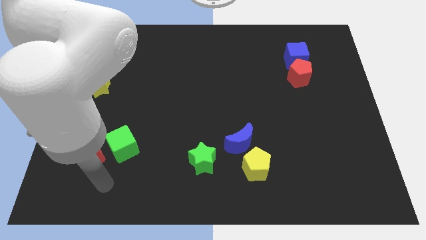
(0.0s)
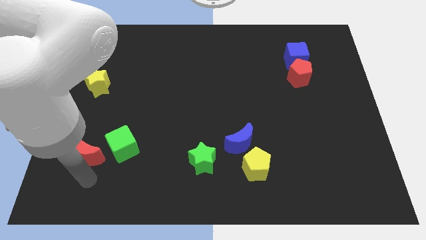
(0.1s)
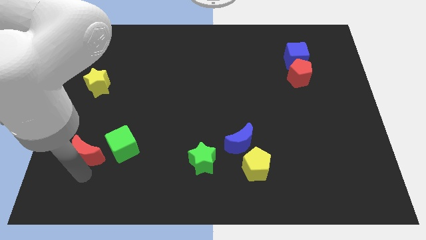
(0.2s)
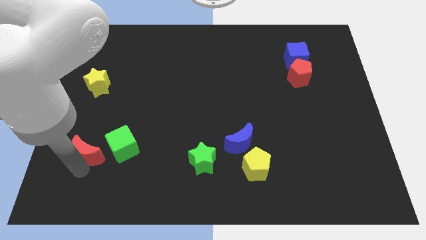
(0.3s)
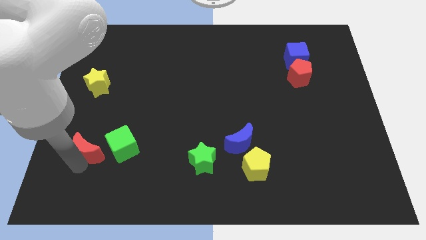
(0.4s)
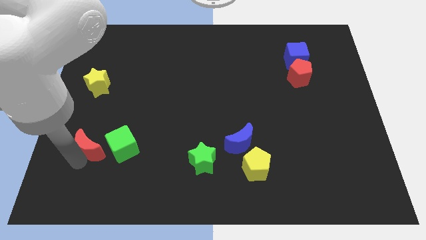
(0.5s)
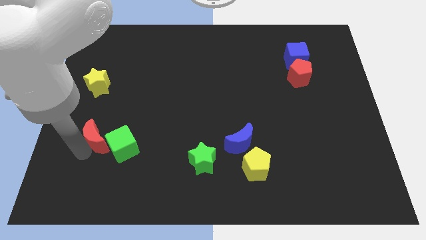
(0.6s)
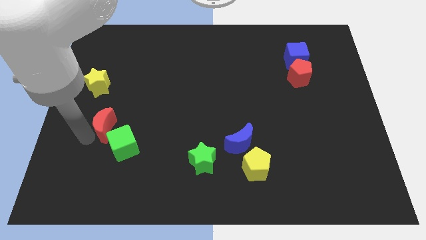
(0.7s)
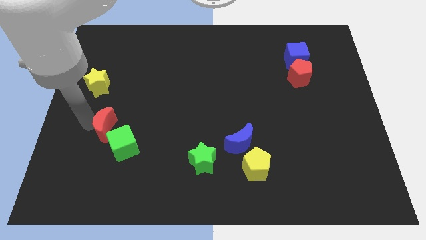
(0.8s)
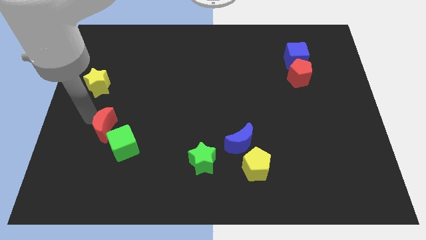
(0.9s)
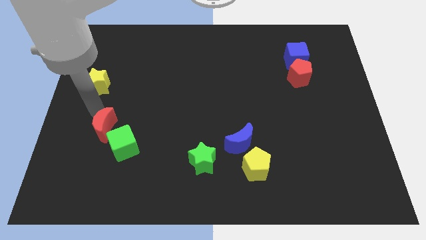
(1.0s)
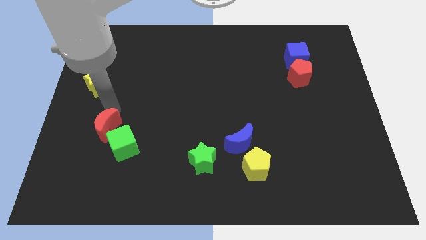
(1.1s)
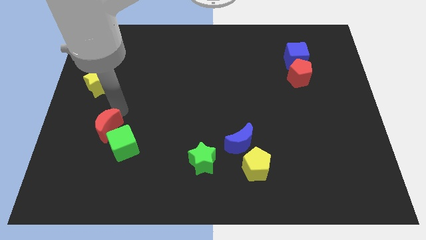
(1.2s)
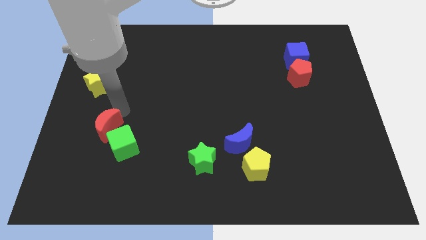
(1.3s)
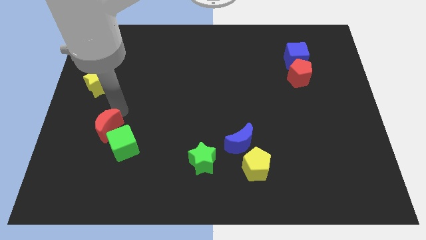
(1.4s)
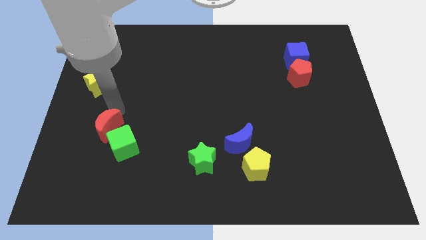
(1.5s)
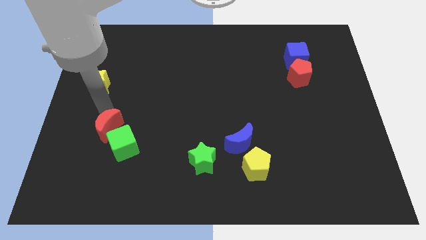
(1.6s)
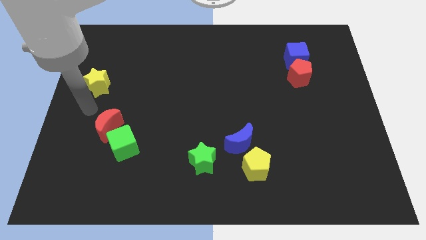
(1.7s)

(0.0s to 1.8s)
place red moon above green cube

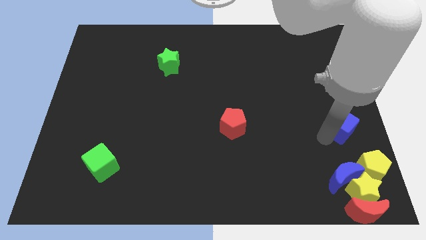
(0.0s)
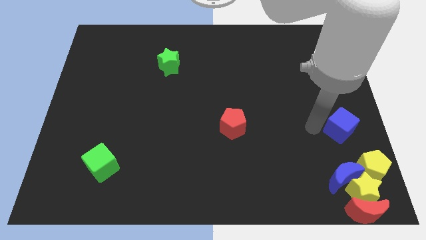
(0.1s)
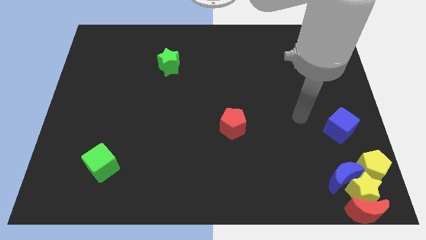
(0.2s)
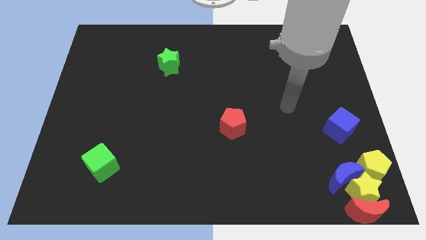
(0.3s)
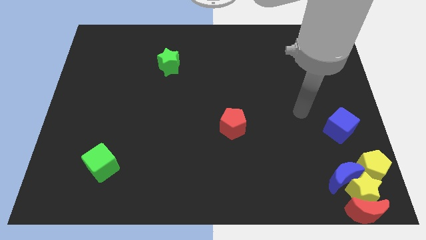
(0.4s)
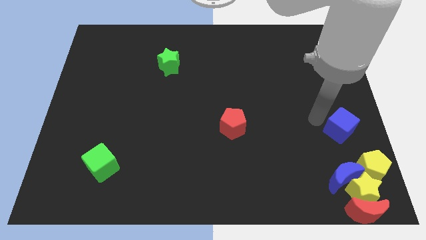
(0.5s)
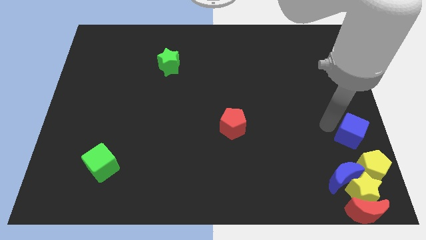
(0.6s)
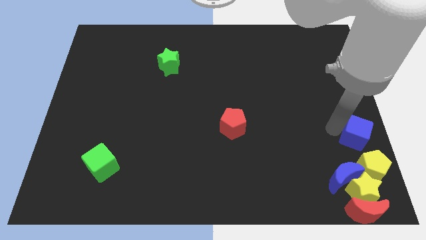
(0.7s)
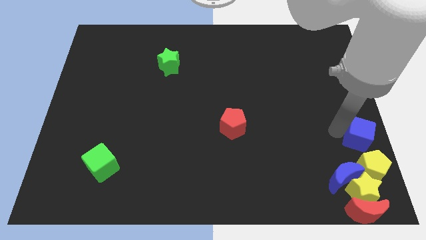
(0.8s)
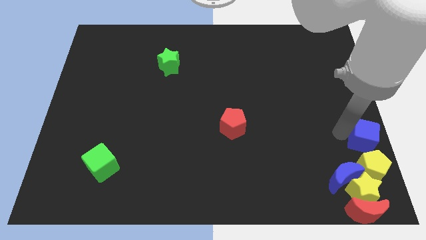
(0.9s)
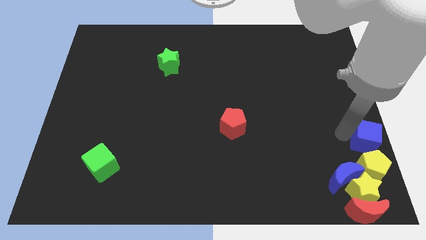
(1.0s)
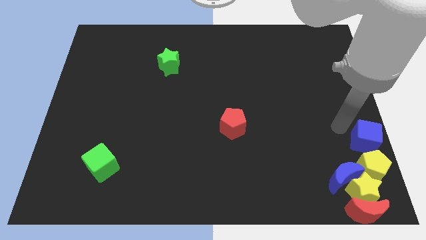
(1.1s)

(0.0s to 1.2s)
push the blue cube to the right side of the board

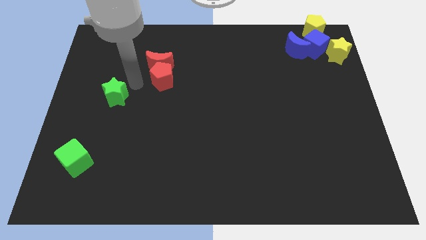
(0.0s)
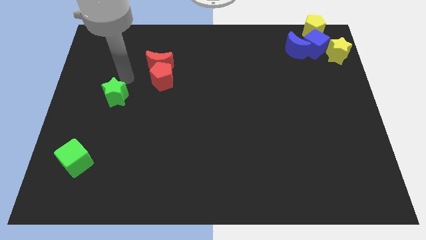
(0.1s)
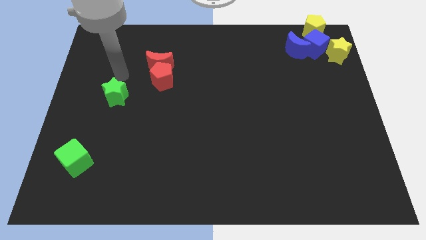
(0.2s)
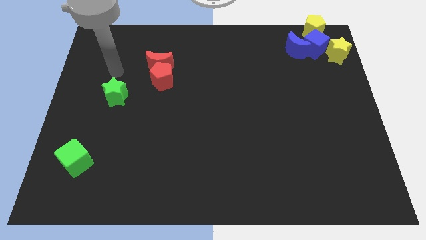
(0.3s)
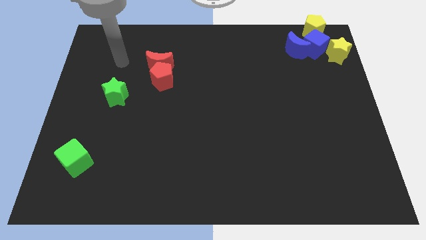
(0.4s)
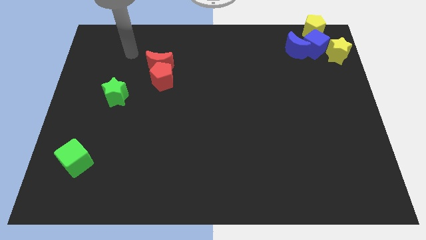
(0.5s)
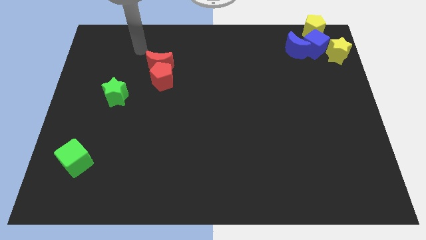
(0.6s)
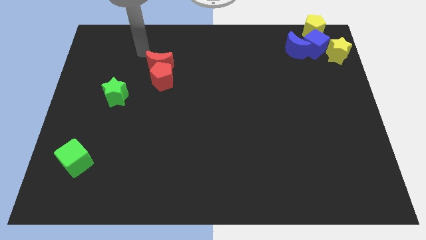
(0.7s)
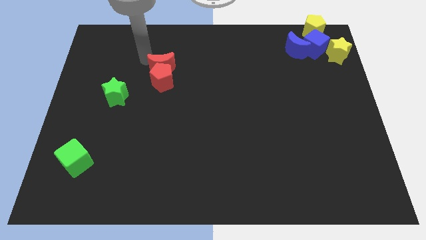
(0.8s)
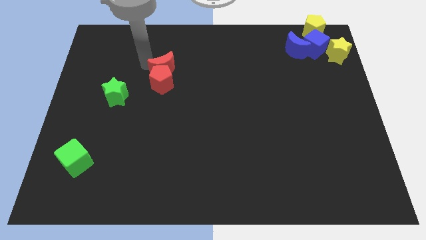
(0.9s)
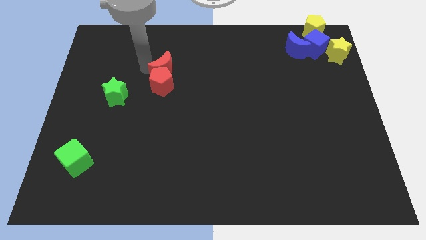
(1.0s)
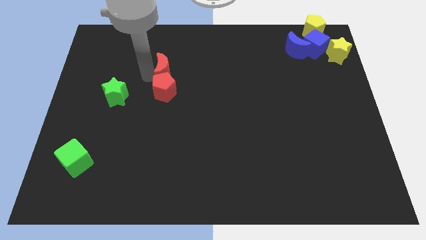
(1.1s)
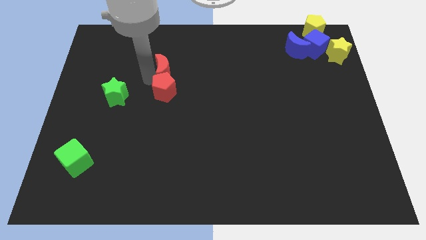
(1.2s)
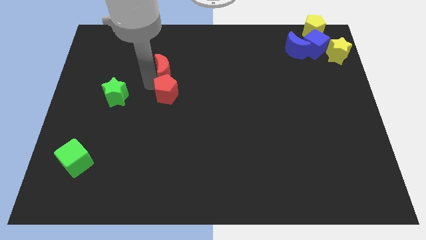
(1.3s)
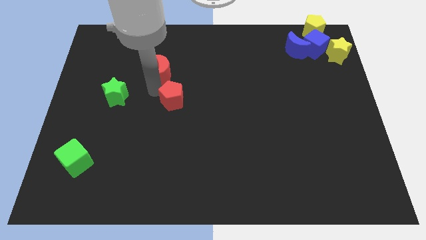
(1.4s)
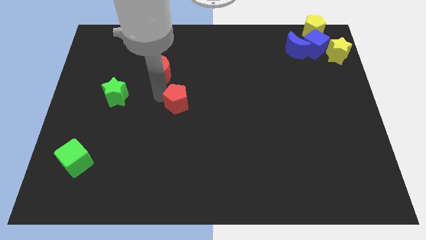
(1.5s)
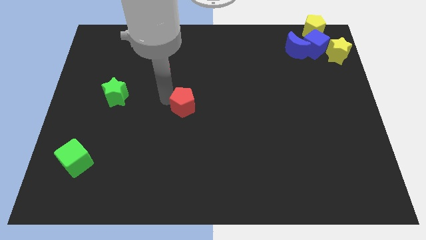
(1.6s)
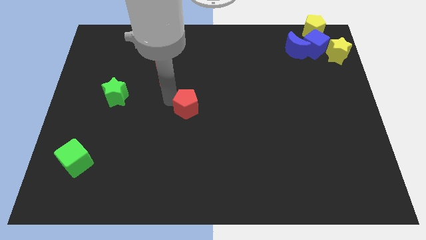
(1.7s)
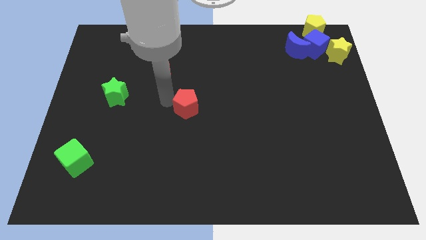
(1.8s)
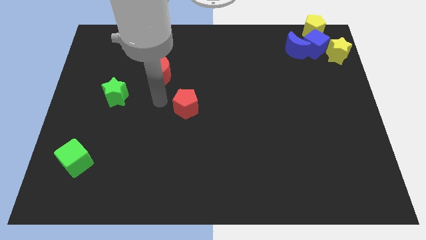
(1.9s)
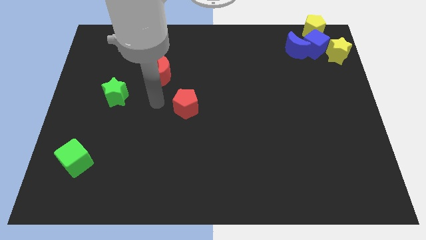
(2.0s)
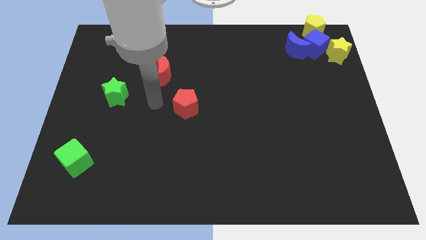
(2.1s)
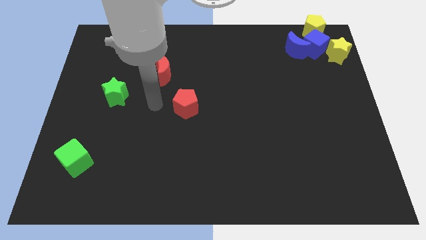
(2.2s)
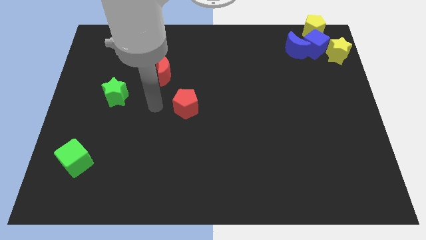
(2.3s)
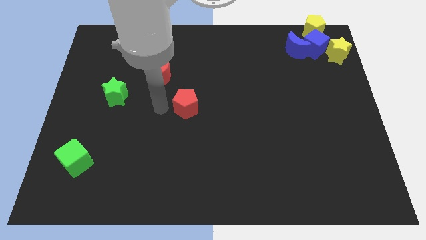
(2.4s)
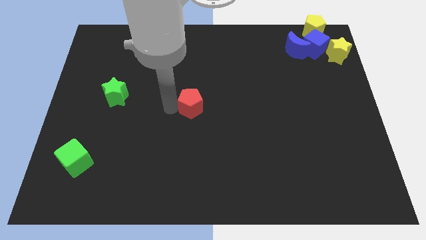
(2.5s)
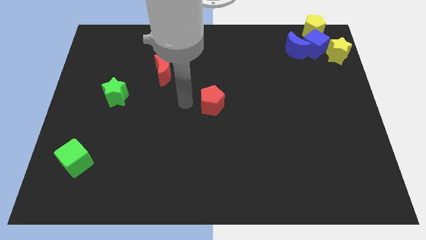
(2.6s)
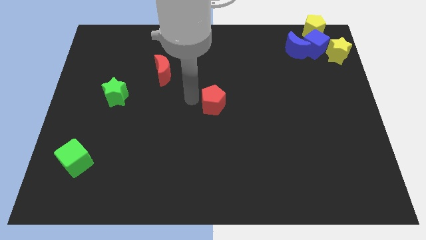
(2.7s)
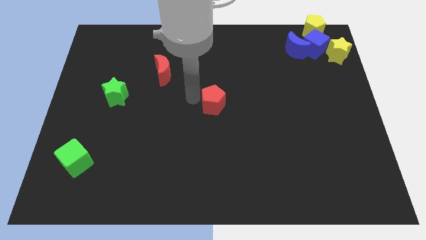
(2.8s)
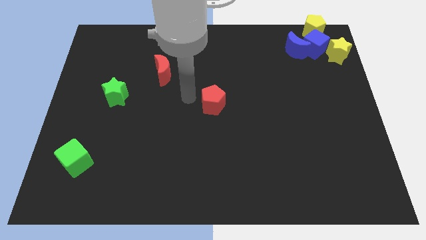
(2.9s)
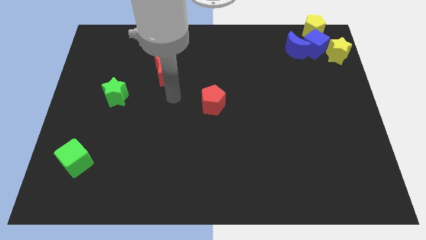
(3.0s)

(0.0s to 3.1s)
place red pentagon at center

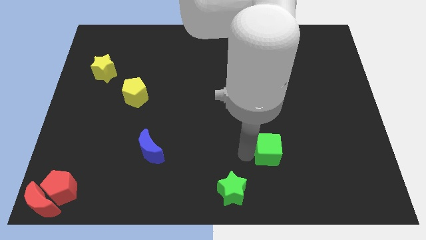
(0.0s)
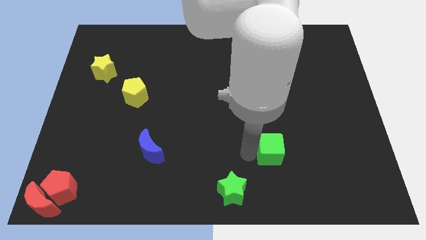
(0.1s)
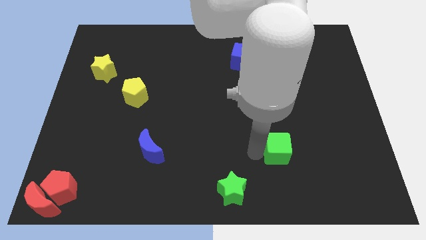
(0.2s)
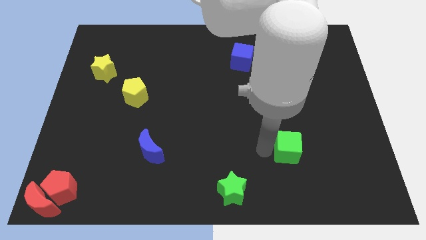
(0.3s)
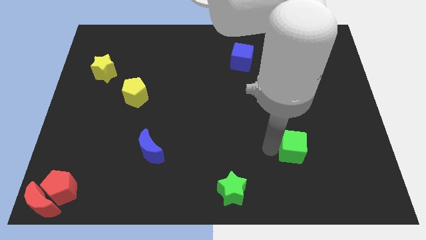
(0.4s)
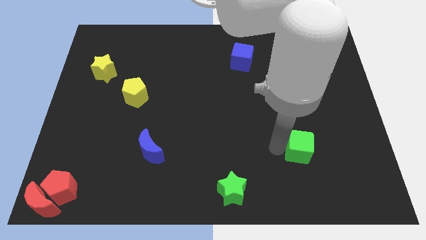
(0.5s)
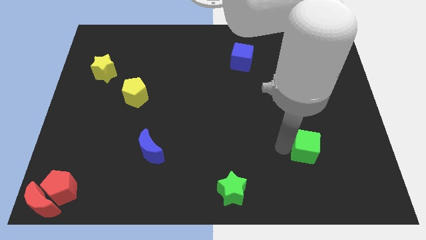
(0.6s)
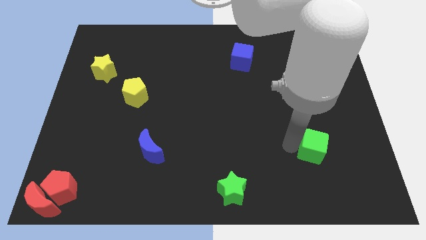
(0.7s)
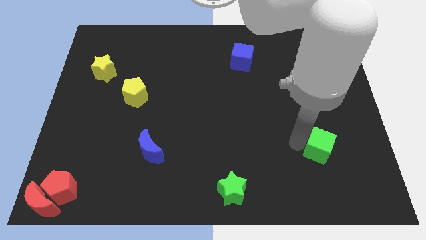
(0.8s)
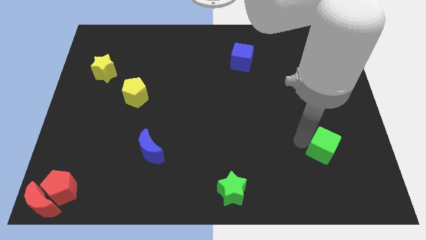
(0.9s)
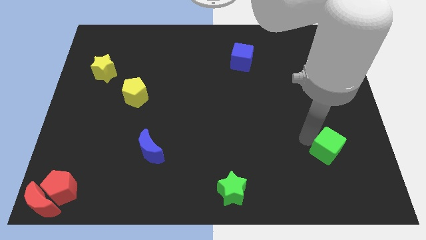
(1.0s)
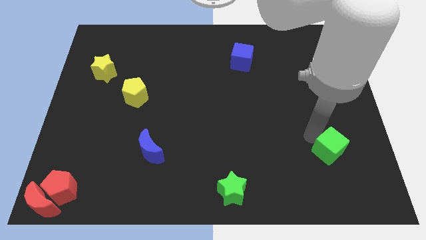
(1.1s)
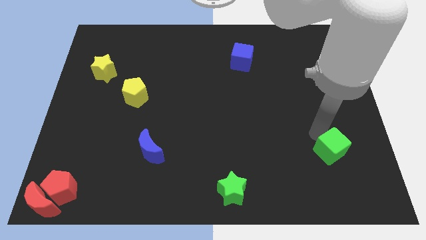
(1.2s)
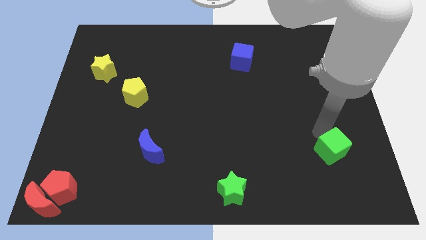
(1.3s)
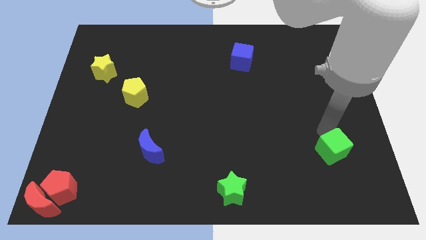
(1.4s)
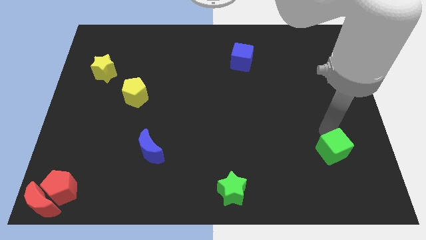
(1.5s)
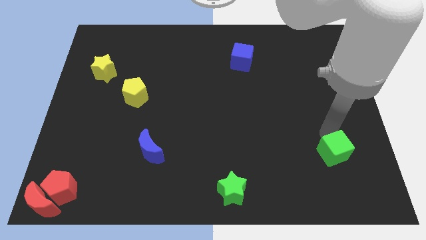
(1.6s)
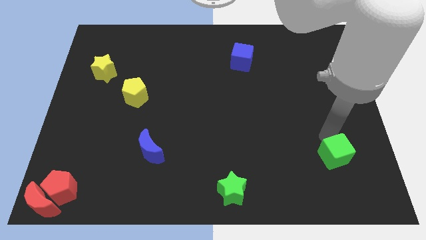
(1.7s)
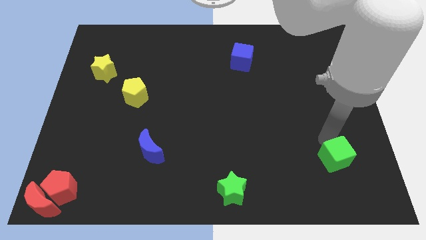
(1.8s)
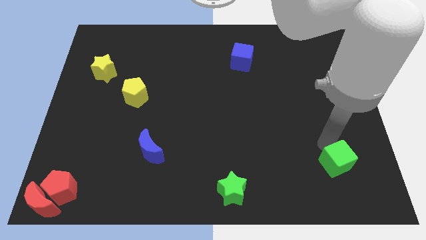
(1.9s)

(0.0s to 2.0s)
push the green cube to the bottom right of the board

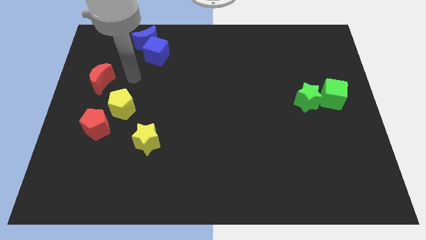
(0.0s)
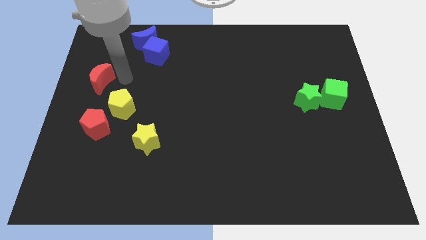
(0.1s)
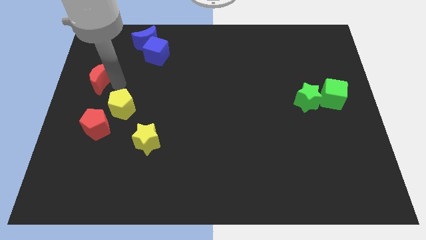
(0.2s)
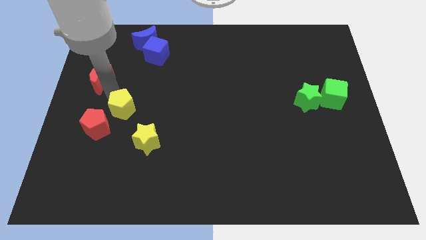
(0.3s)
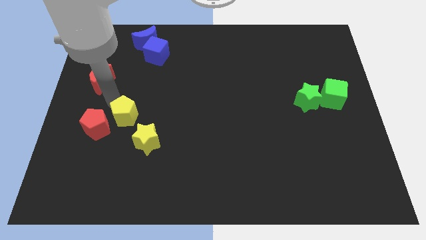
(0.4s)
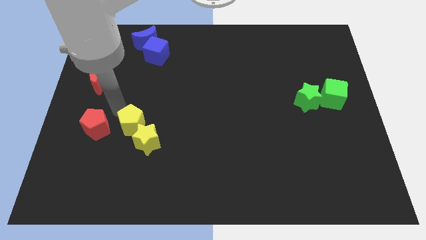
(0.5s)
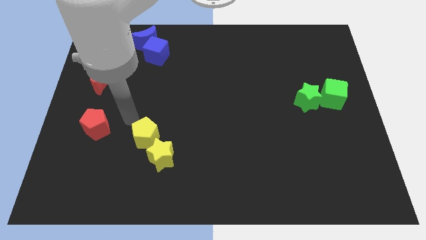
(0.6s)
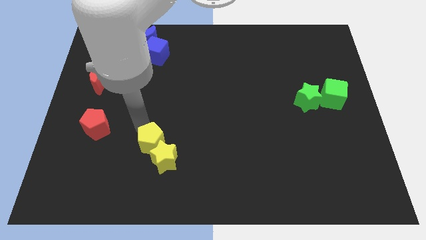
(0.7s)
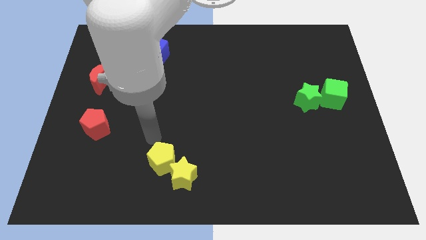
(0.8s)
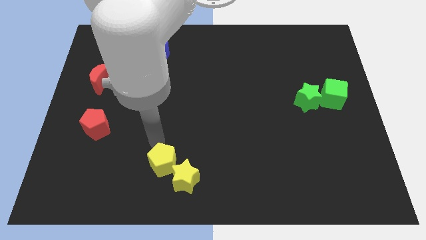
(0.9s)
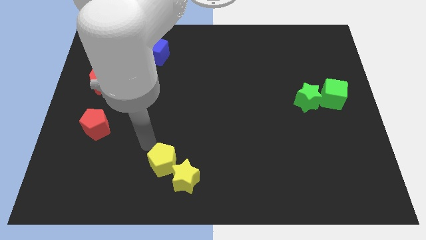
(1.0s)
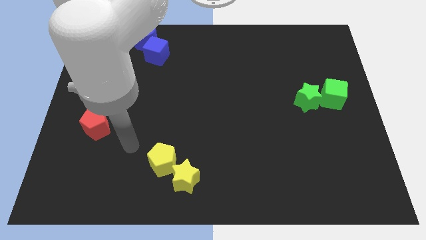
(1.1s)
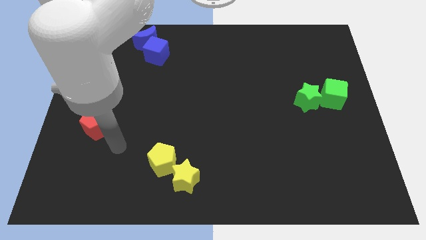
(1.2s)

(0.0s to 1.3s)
move yellow blocks towards bottom centre of the board
